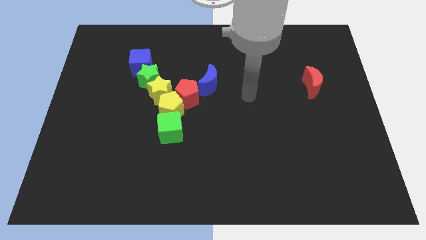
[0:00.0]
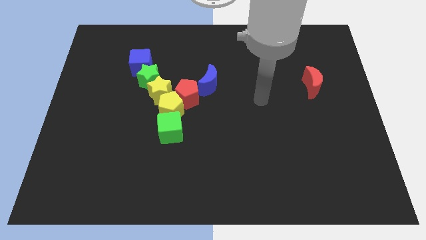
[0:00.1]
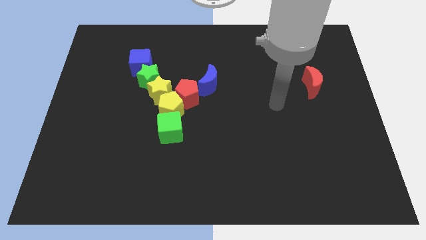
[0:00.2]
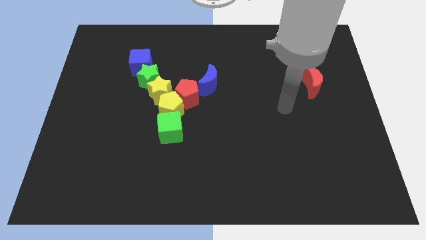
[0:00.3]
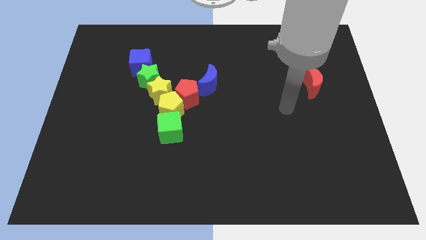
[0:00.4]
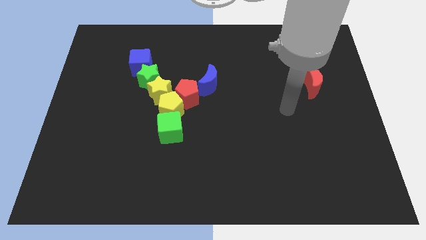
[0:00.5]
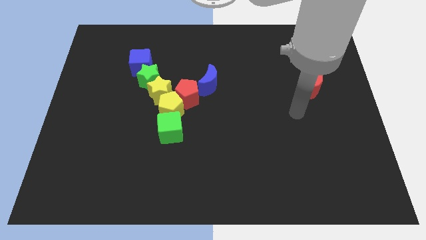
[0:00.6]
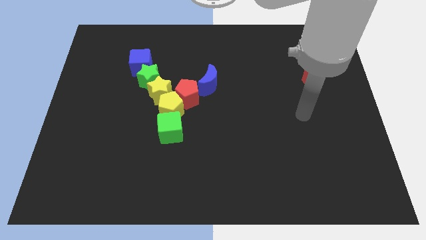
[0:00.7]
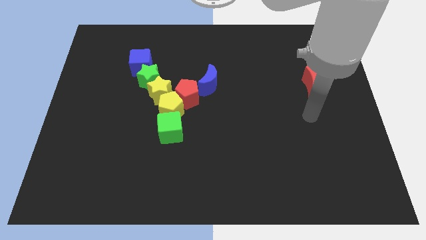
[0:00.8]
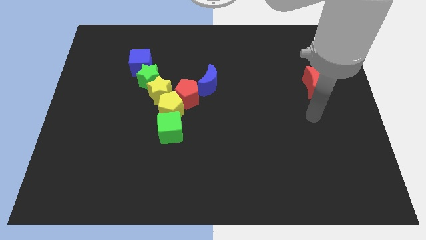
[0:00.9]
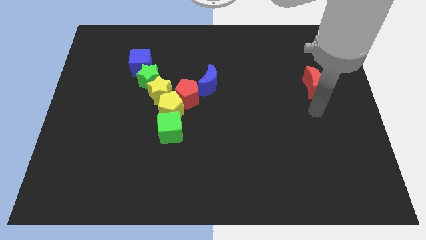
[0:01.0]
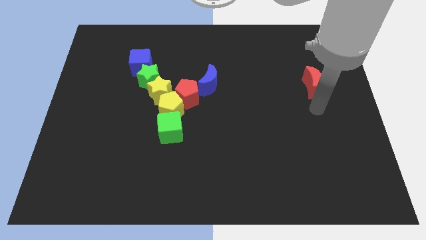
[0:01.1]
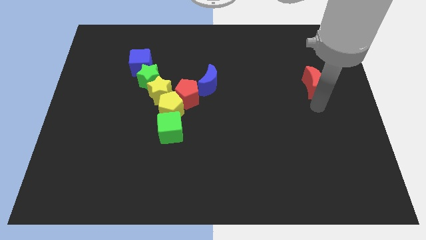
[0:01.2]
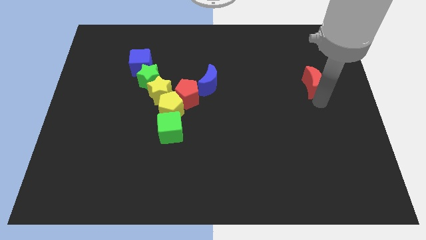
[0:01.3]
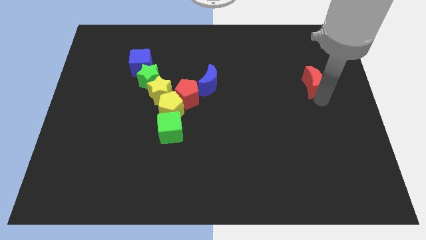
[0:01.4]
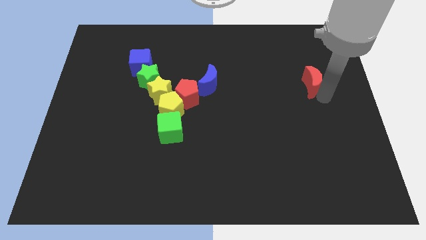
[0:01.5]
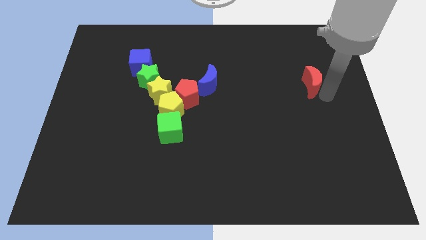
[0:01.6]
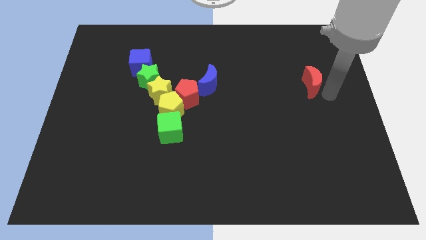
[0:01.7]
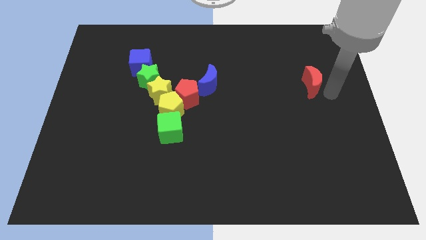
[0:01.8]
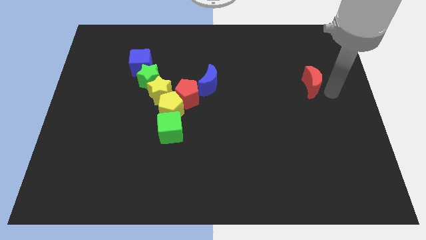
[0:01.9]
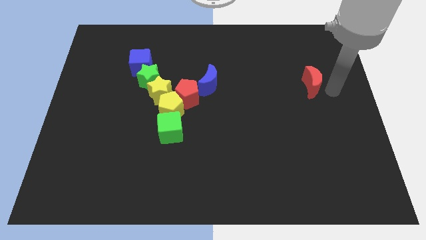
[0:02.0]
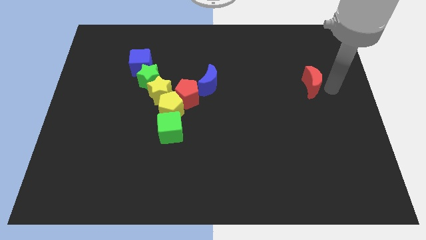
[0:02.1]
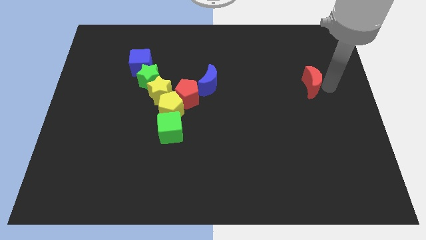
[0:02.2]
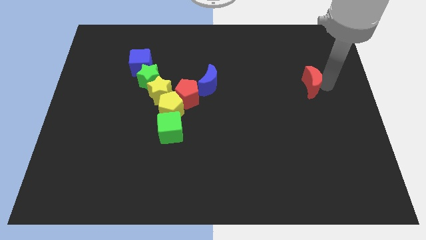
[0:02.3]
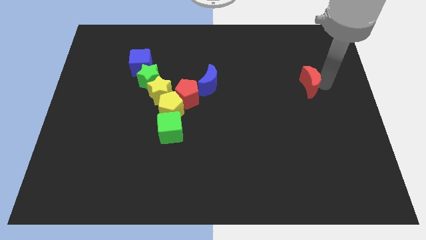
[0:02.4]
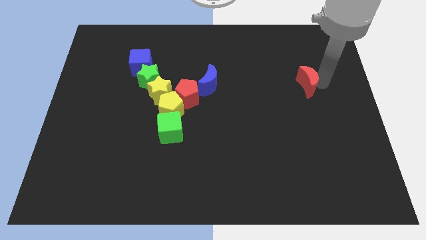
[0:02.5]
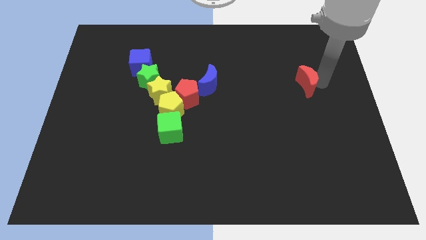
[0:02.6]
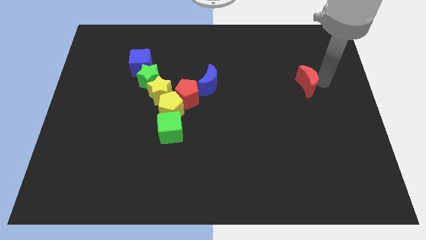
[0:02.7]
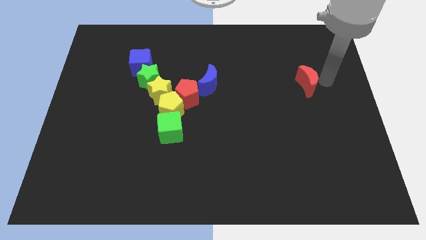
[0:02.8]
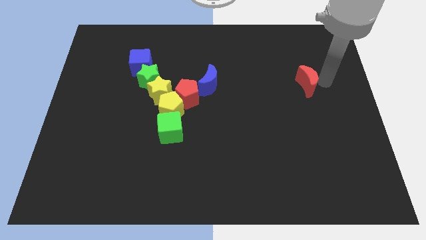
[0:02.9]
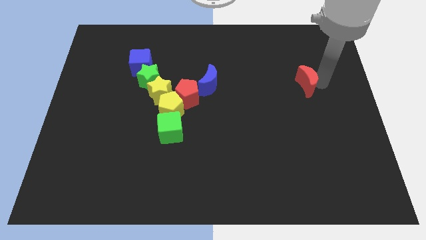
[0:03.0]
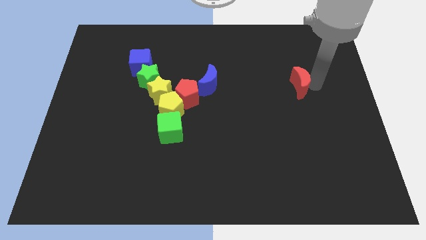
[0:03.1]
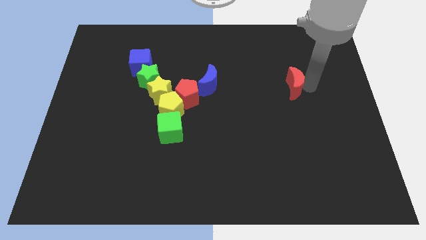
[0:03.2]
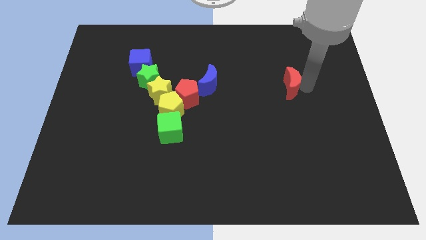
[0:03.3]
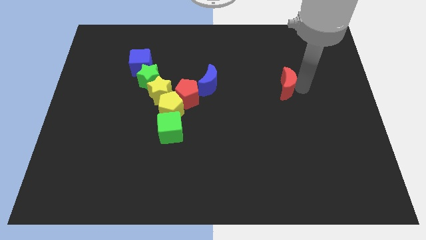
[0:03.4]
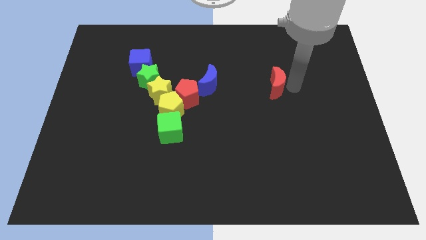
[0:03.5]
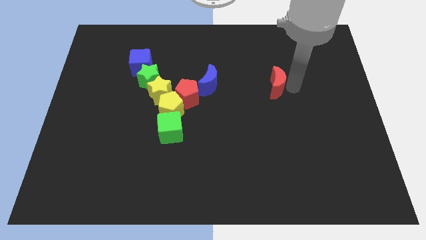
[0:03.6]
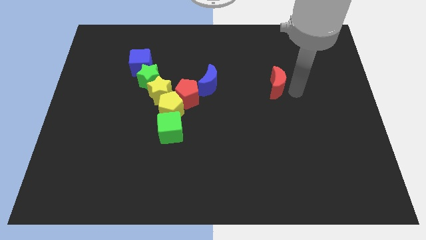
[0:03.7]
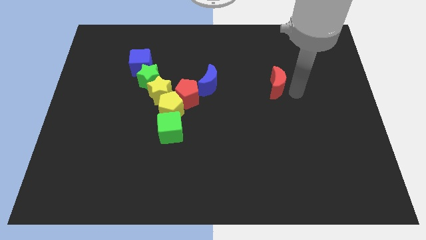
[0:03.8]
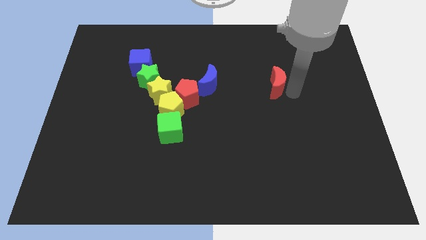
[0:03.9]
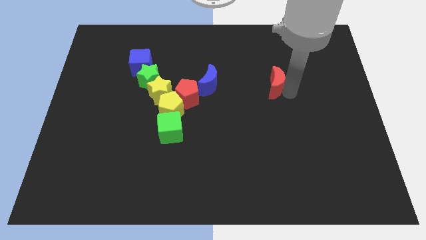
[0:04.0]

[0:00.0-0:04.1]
move the red crescent towards the left side of the board

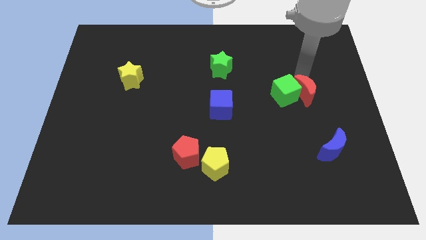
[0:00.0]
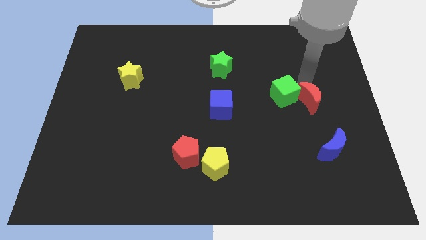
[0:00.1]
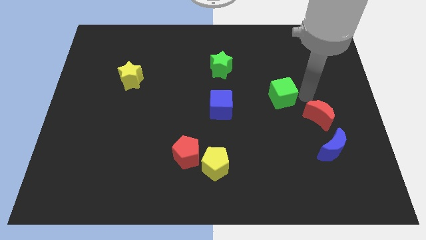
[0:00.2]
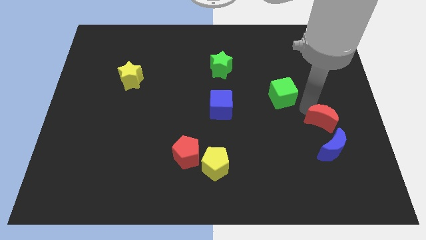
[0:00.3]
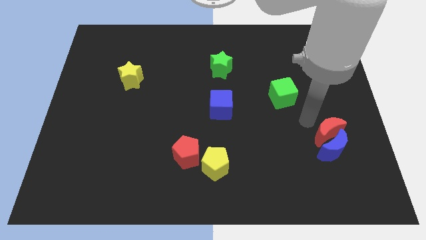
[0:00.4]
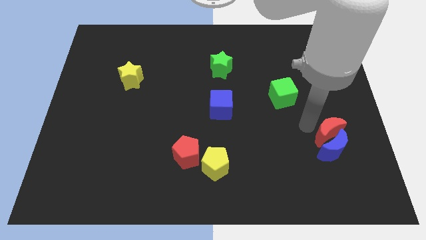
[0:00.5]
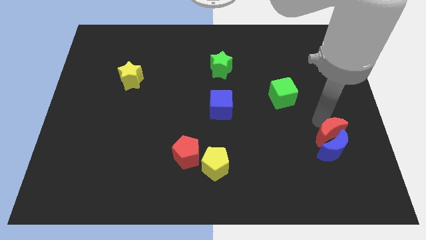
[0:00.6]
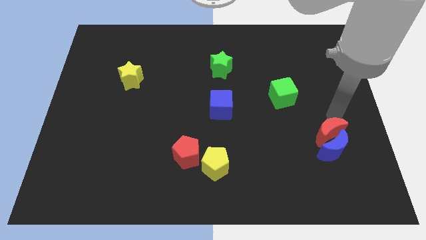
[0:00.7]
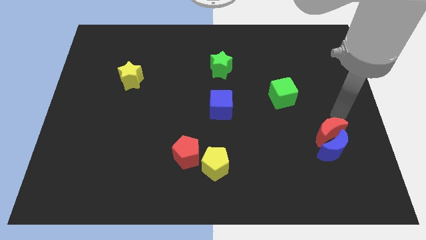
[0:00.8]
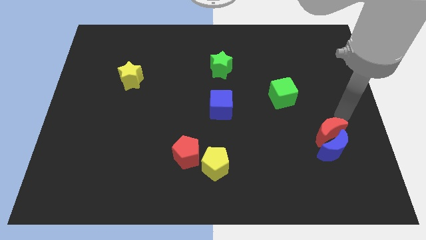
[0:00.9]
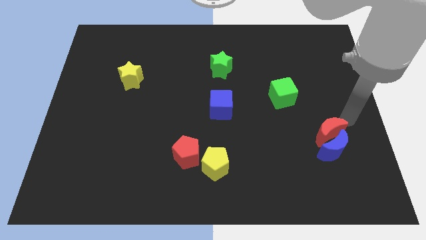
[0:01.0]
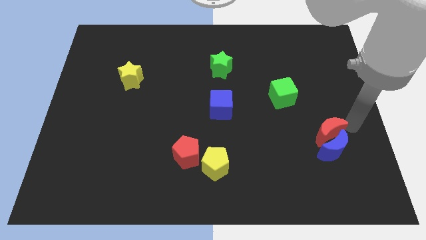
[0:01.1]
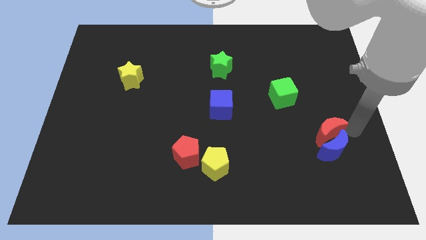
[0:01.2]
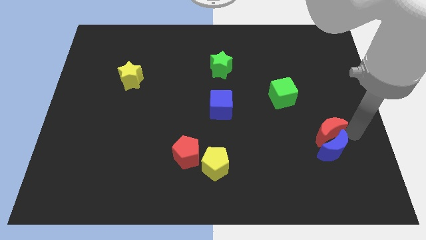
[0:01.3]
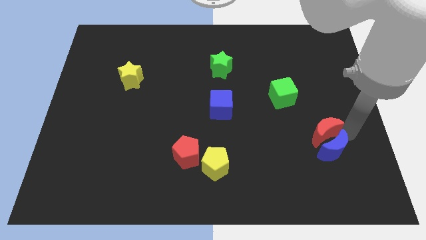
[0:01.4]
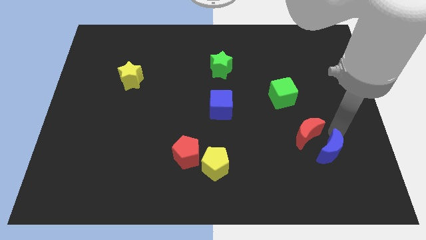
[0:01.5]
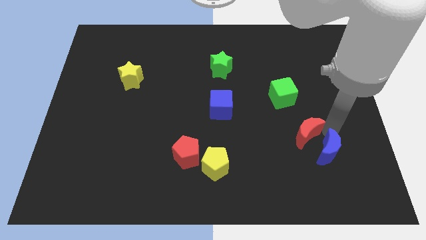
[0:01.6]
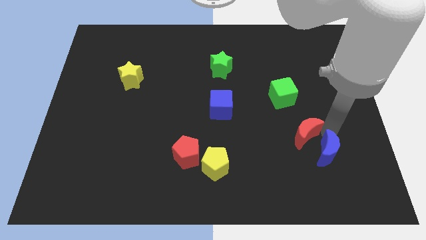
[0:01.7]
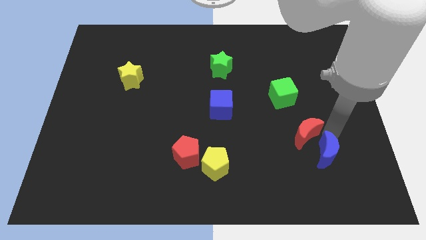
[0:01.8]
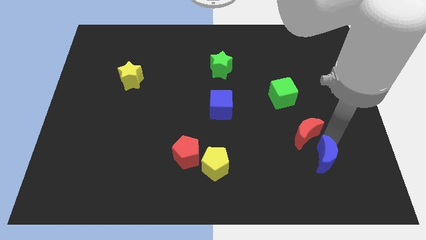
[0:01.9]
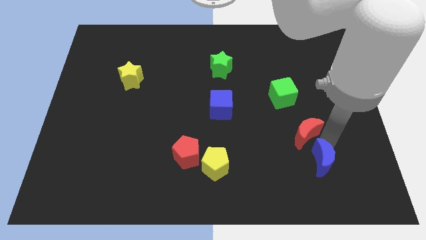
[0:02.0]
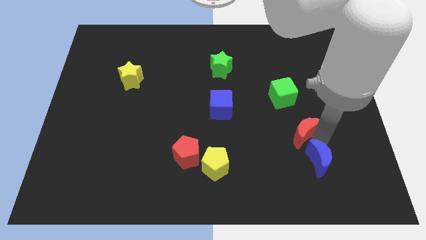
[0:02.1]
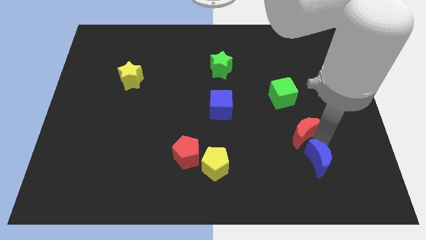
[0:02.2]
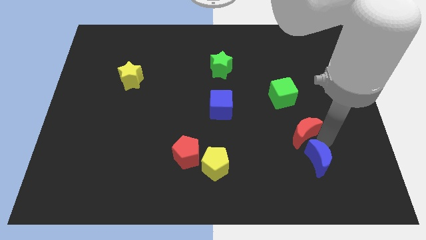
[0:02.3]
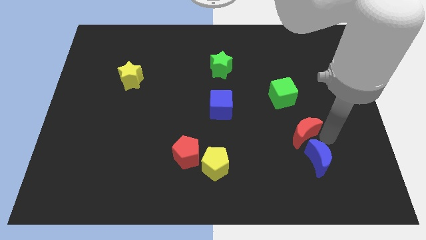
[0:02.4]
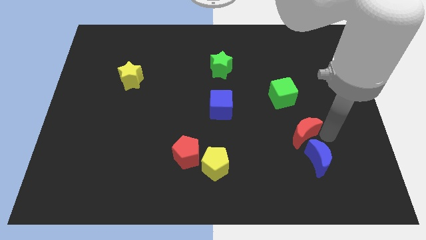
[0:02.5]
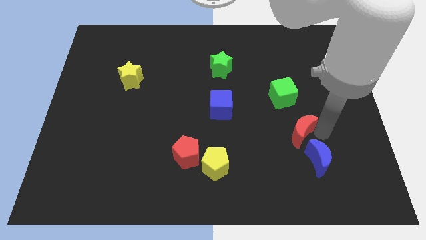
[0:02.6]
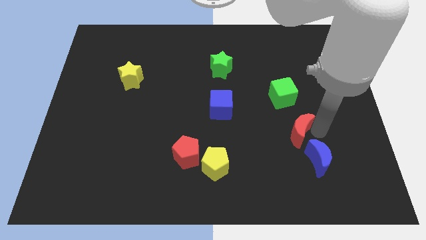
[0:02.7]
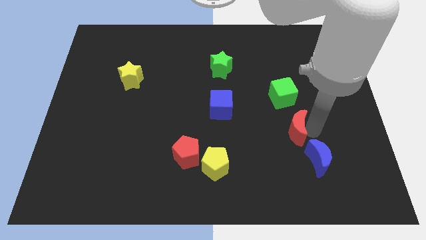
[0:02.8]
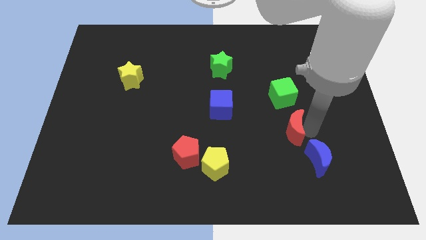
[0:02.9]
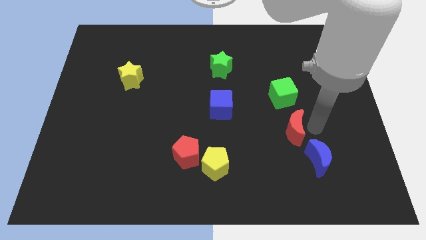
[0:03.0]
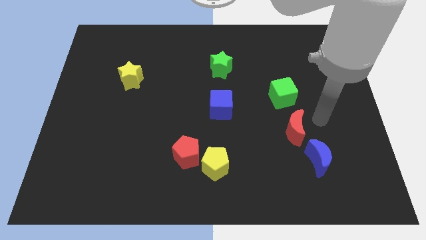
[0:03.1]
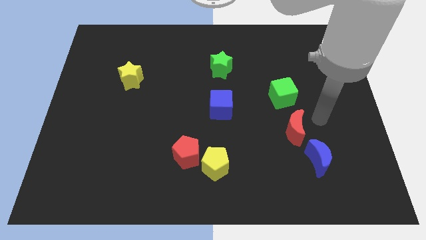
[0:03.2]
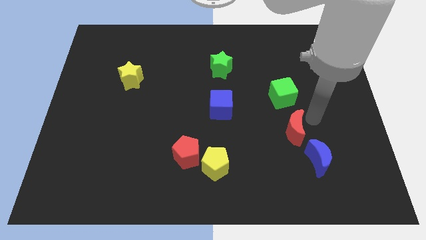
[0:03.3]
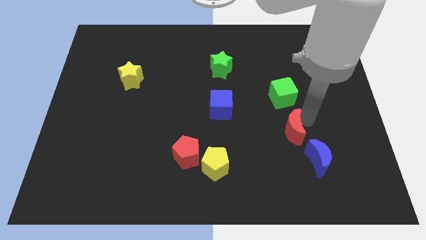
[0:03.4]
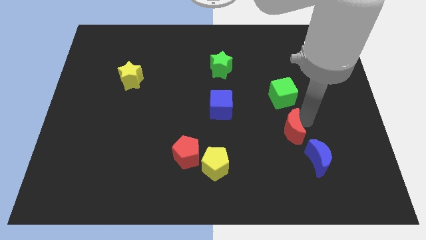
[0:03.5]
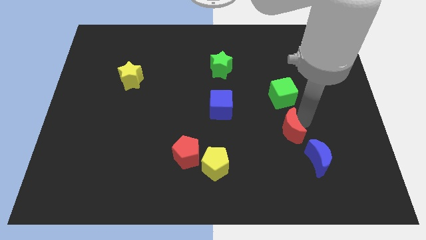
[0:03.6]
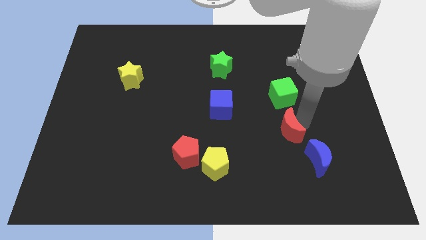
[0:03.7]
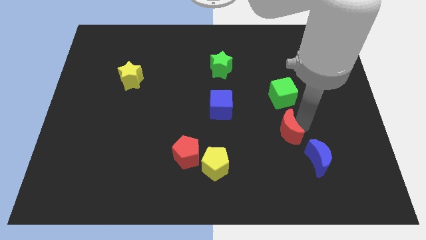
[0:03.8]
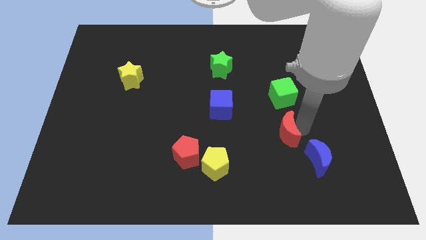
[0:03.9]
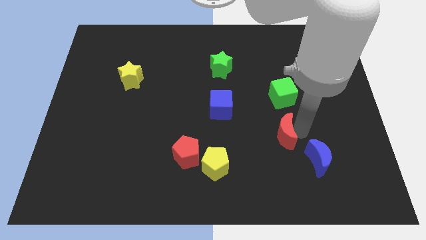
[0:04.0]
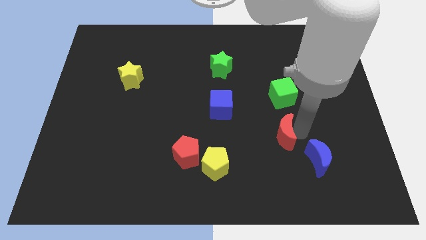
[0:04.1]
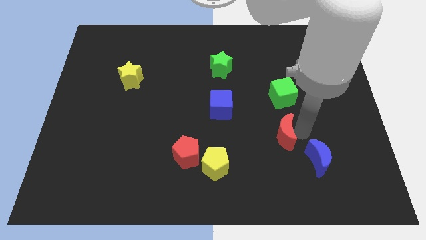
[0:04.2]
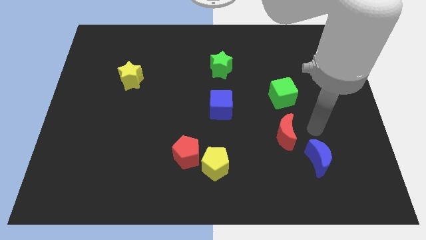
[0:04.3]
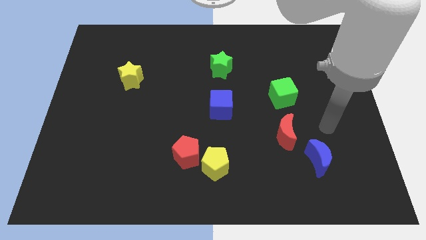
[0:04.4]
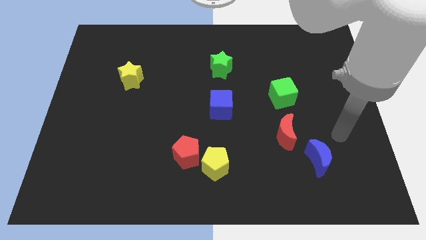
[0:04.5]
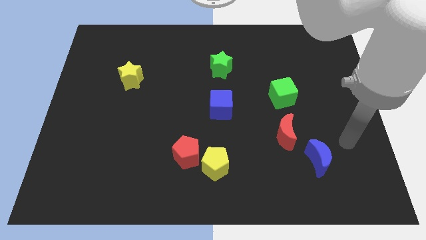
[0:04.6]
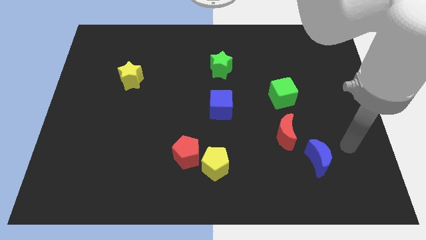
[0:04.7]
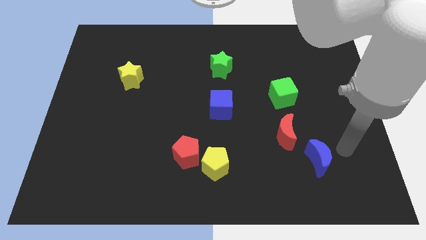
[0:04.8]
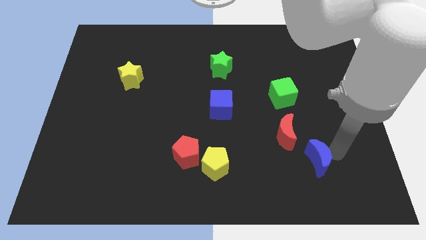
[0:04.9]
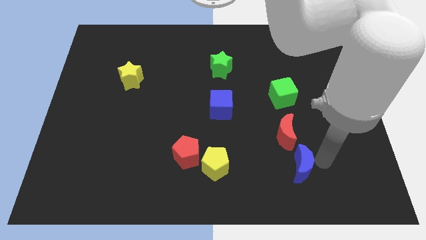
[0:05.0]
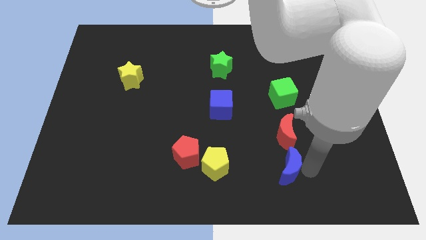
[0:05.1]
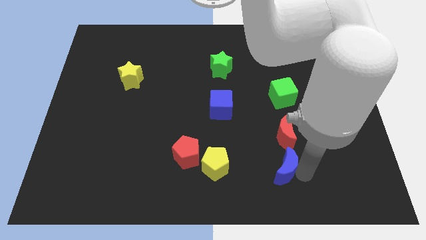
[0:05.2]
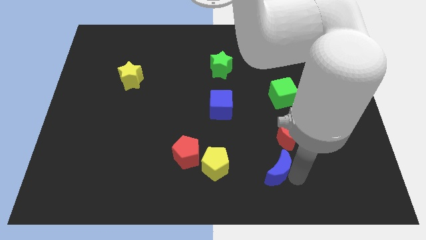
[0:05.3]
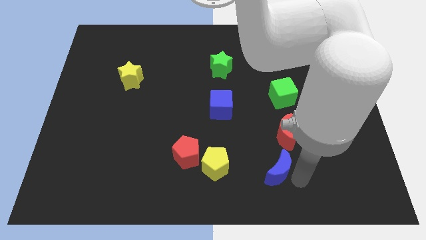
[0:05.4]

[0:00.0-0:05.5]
place the crescents to form a line with green cube
